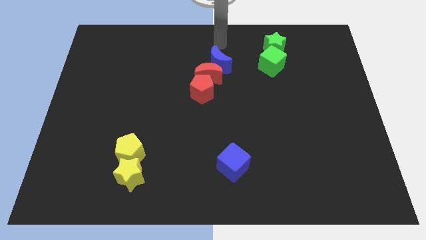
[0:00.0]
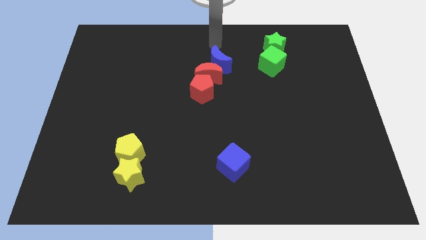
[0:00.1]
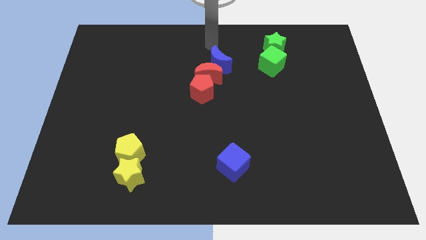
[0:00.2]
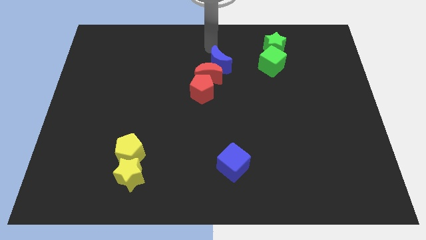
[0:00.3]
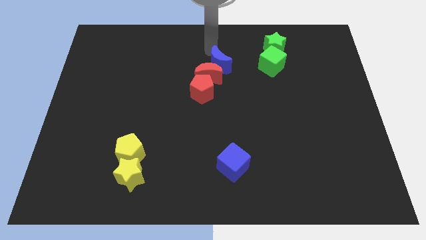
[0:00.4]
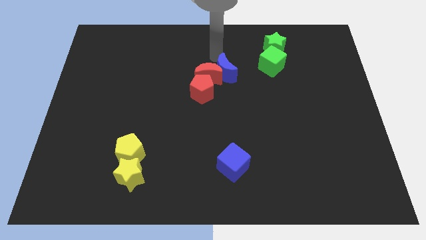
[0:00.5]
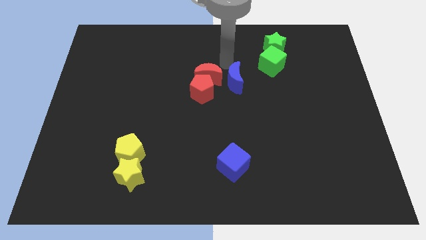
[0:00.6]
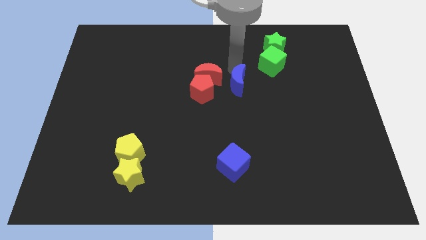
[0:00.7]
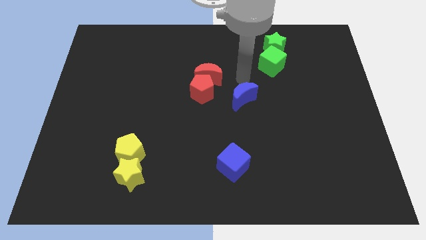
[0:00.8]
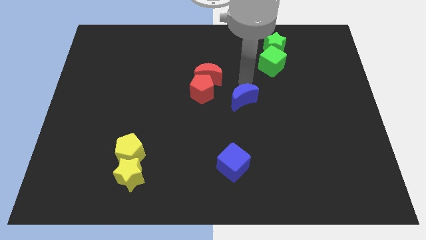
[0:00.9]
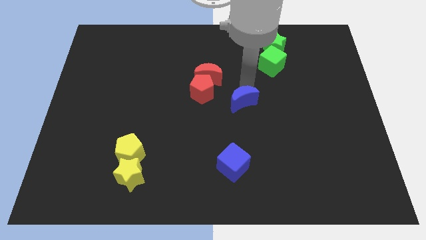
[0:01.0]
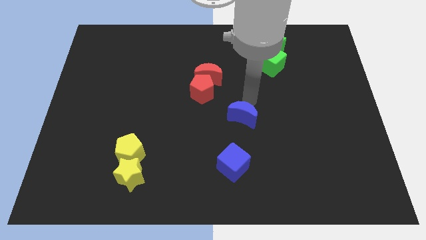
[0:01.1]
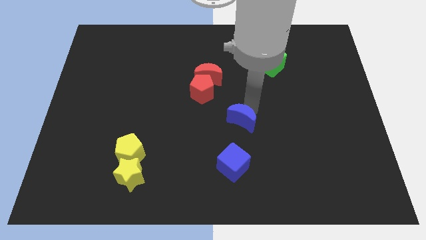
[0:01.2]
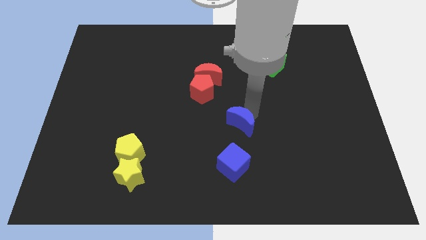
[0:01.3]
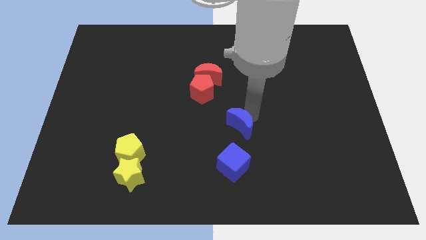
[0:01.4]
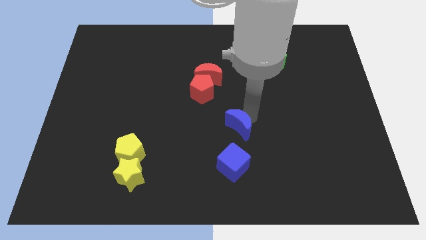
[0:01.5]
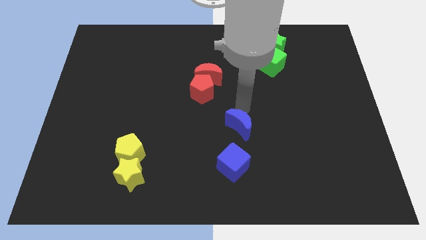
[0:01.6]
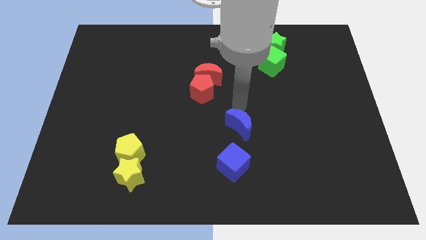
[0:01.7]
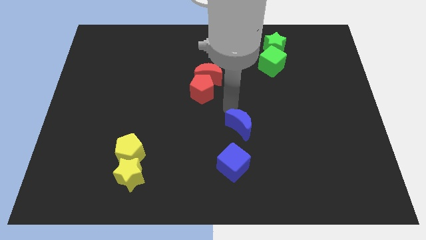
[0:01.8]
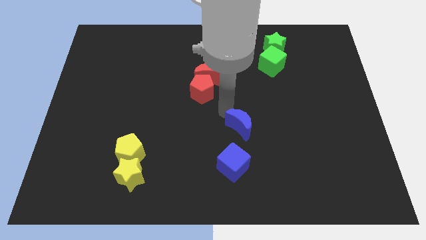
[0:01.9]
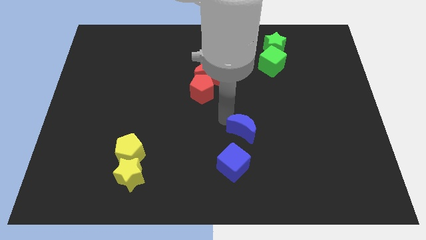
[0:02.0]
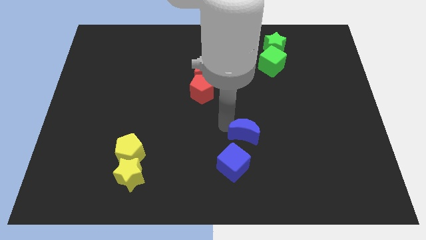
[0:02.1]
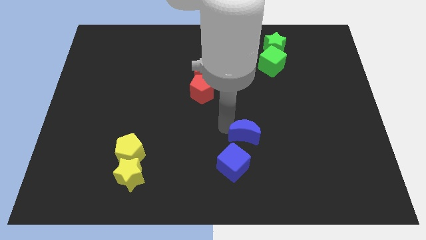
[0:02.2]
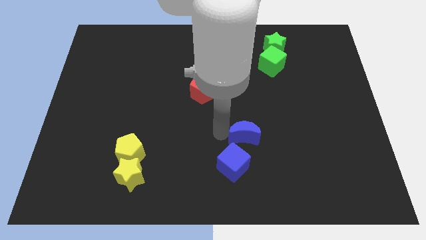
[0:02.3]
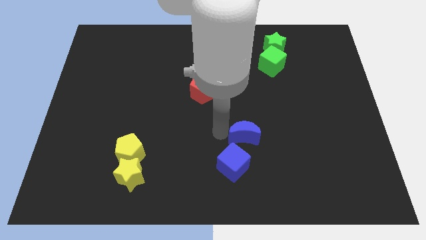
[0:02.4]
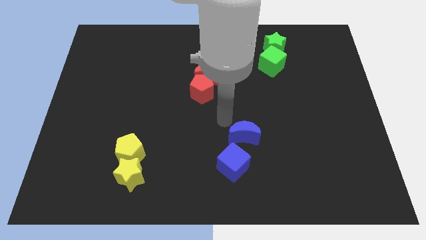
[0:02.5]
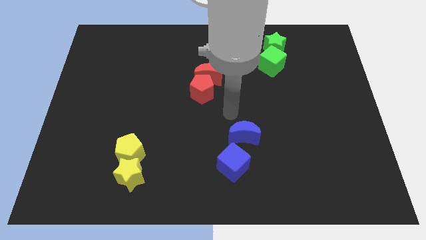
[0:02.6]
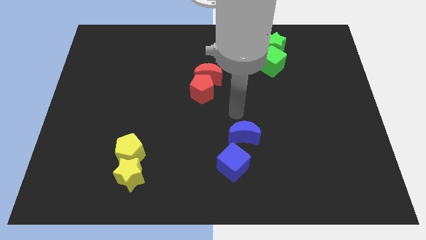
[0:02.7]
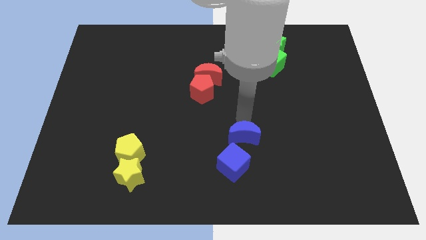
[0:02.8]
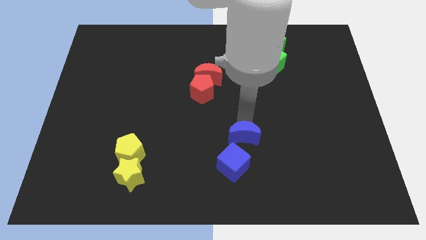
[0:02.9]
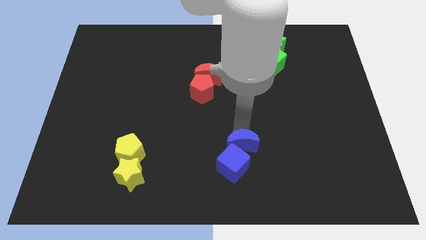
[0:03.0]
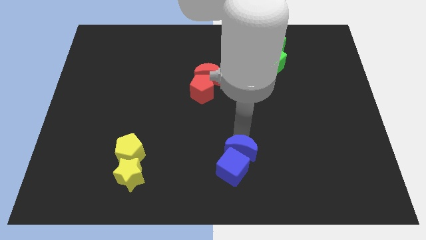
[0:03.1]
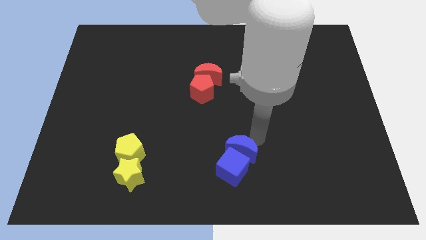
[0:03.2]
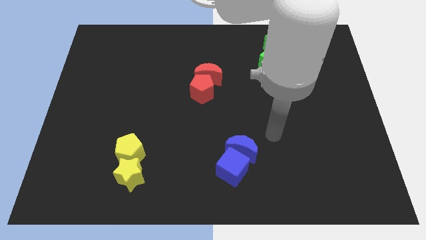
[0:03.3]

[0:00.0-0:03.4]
move the blue moon to the top of the blue cube

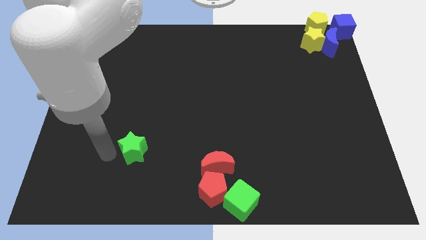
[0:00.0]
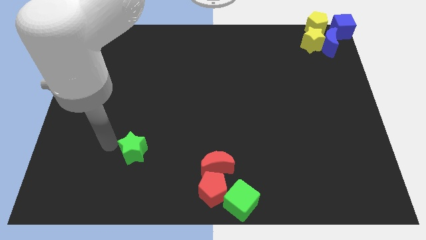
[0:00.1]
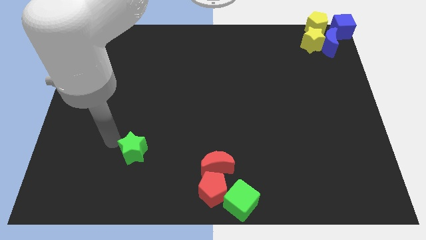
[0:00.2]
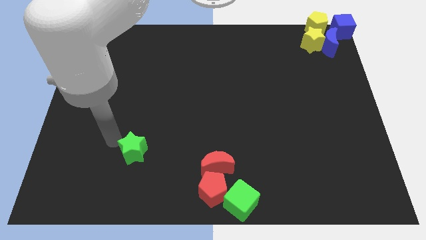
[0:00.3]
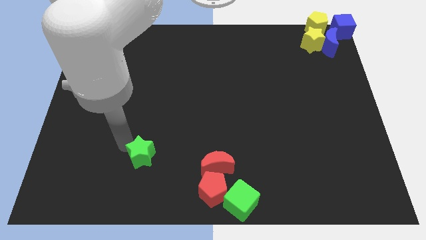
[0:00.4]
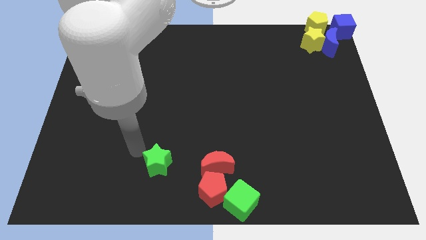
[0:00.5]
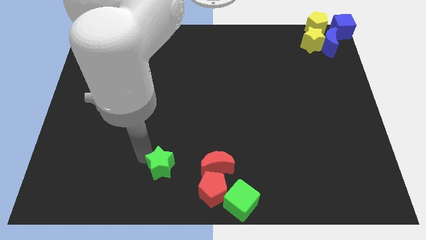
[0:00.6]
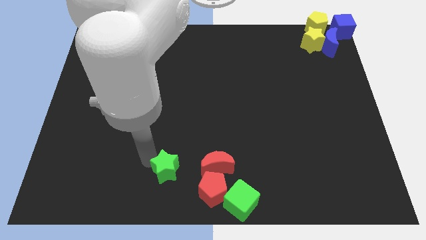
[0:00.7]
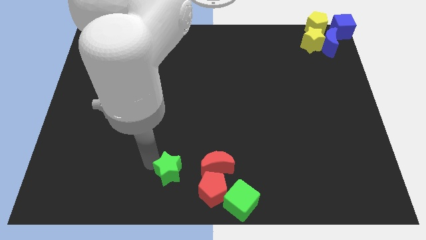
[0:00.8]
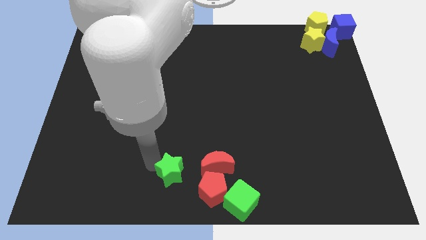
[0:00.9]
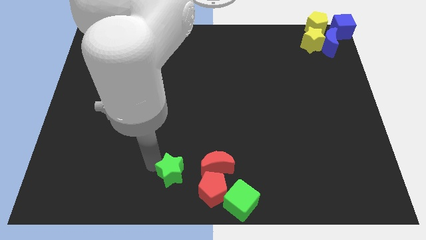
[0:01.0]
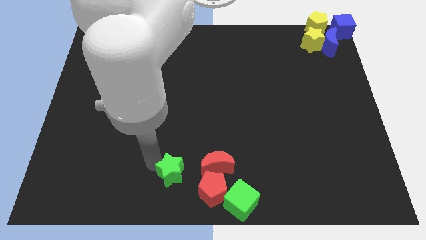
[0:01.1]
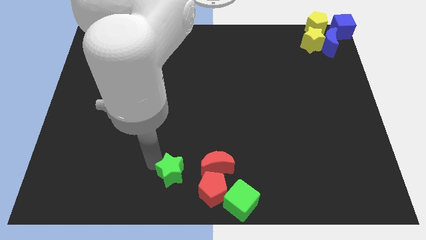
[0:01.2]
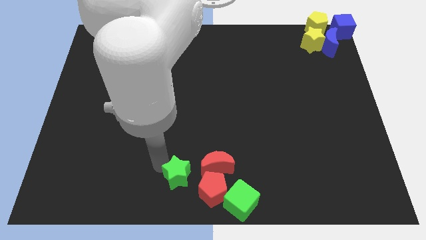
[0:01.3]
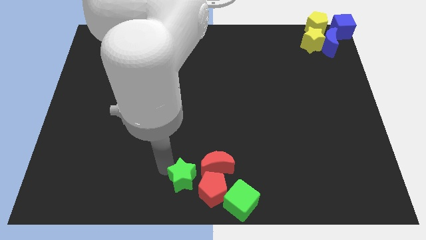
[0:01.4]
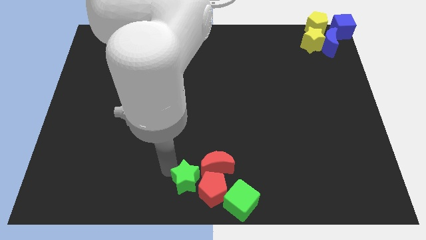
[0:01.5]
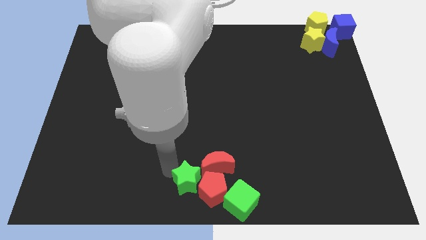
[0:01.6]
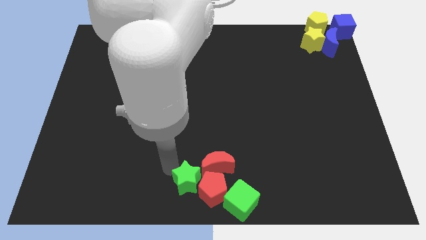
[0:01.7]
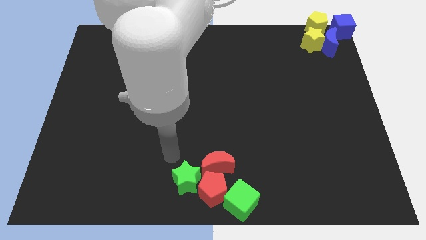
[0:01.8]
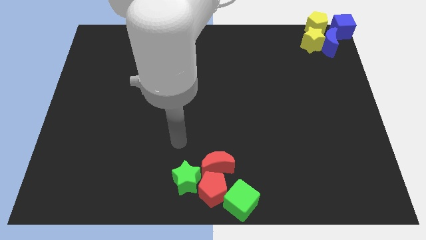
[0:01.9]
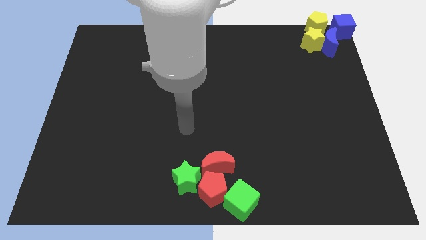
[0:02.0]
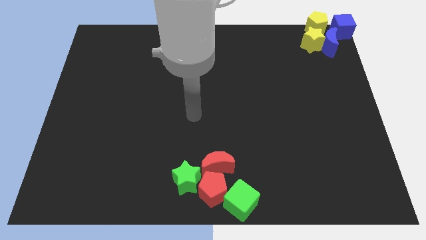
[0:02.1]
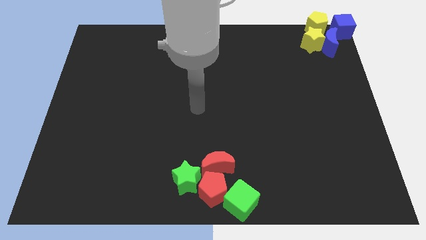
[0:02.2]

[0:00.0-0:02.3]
move the green star into the red pentagon

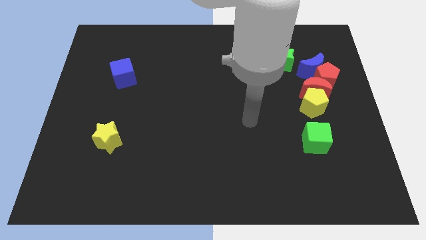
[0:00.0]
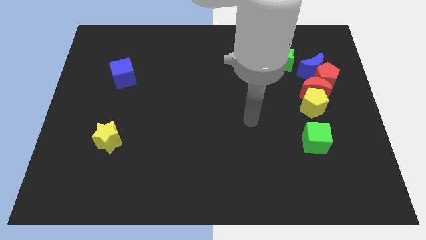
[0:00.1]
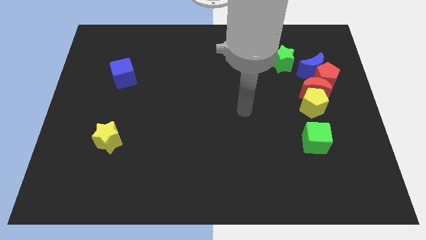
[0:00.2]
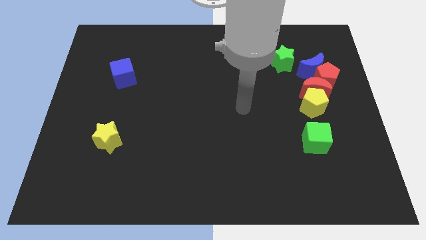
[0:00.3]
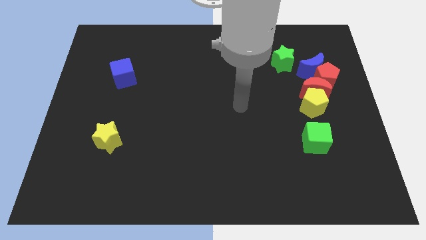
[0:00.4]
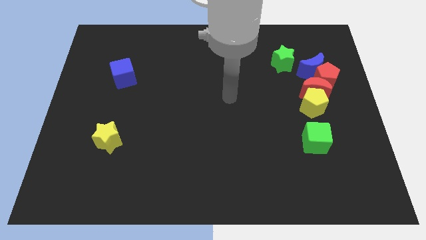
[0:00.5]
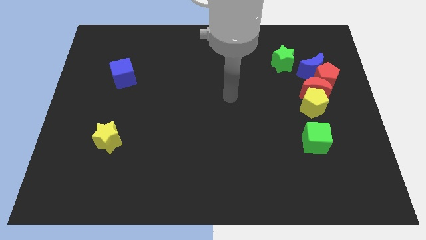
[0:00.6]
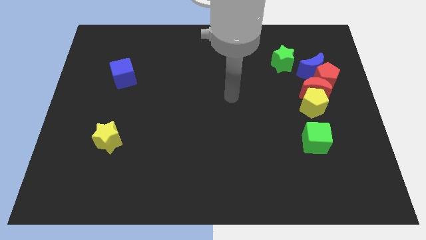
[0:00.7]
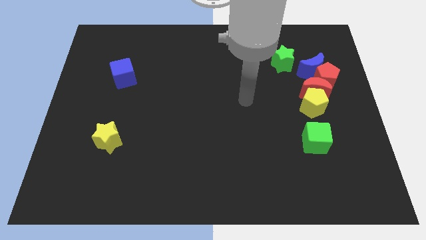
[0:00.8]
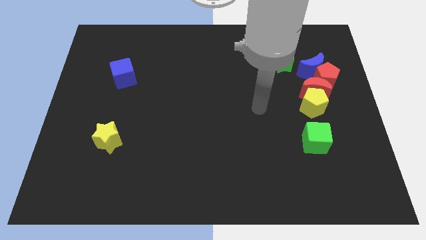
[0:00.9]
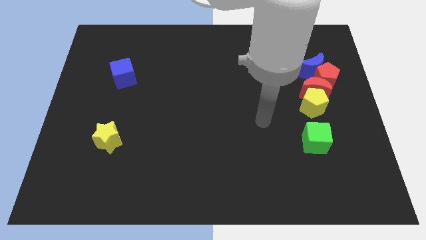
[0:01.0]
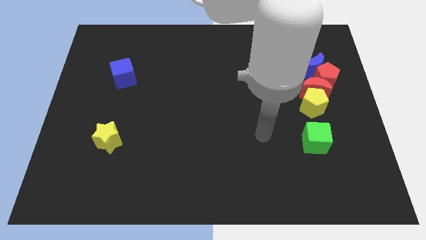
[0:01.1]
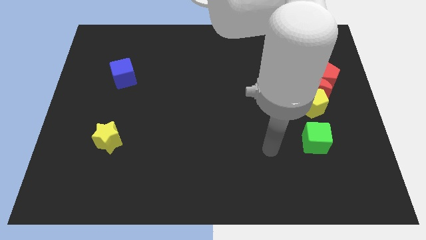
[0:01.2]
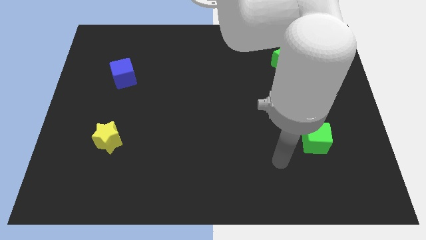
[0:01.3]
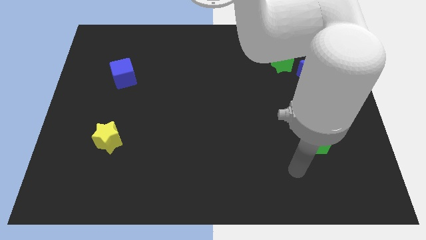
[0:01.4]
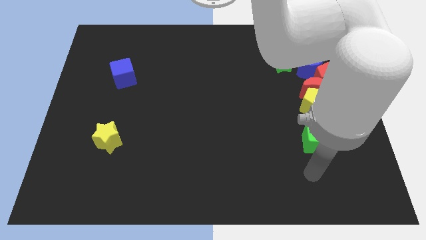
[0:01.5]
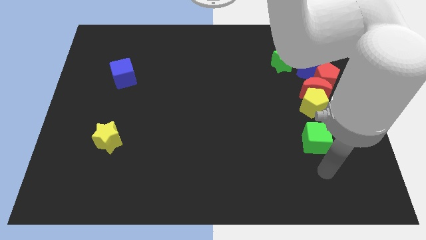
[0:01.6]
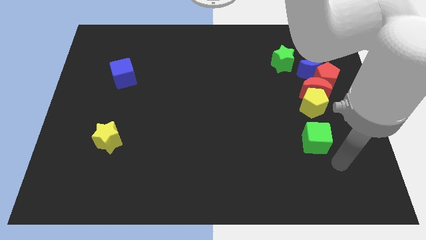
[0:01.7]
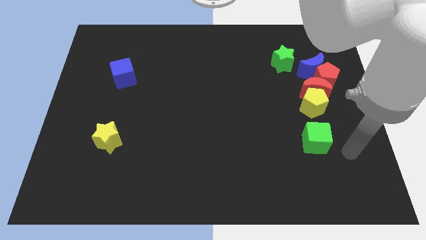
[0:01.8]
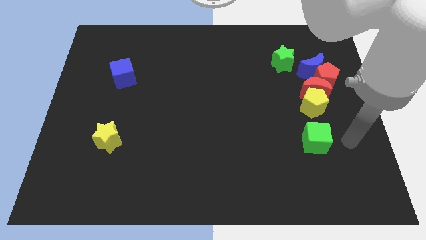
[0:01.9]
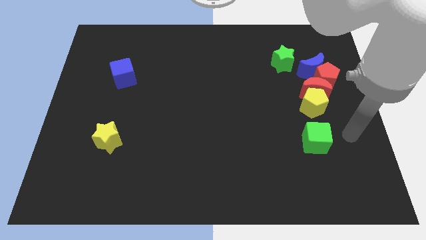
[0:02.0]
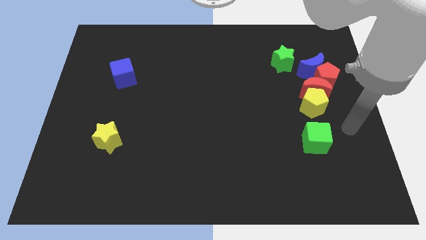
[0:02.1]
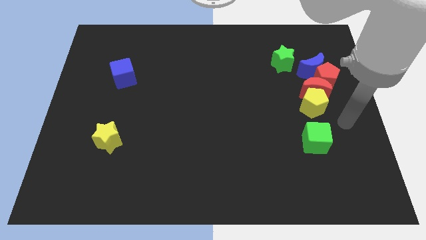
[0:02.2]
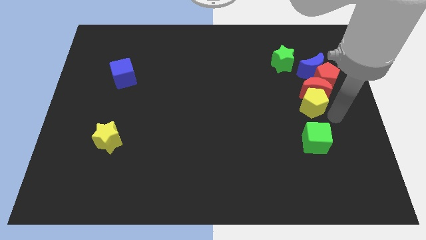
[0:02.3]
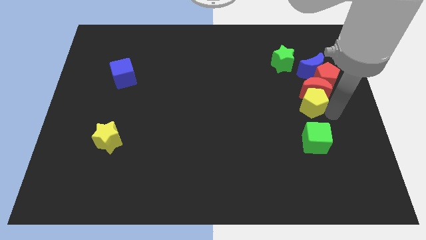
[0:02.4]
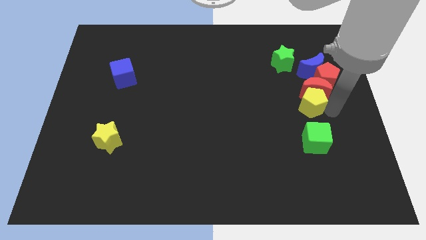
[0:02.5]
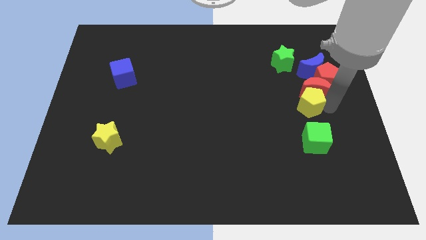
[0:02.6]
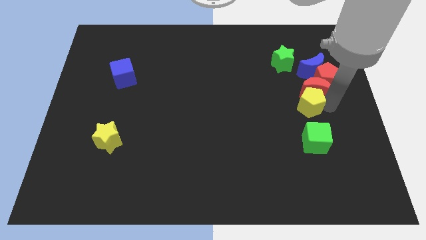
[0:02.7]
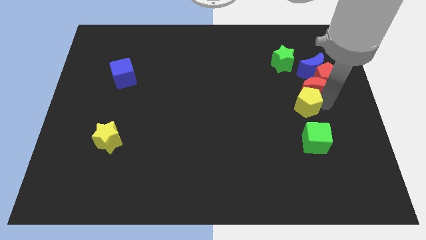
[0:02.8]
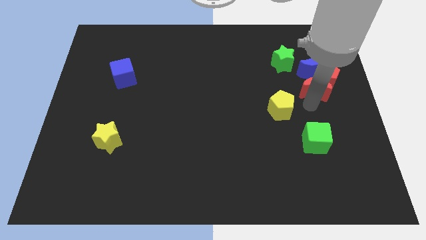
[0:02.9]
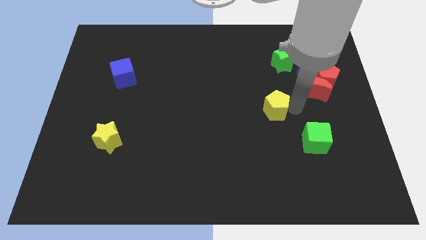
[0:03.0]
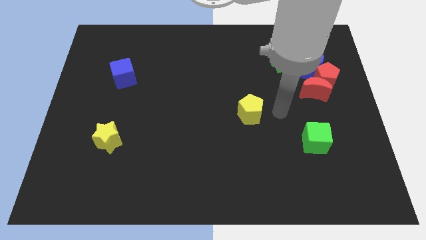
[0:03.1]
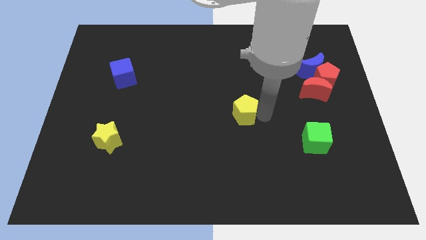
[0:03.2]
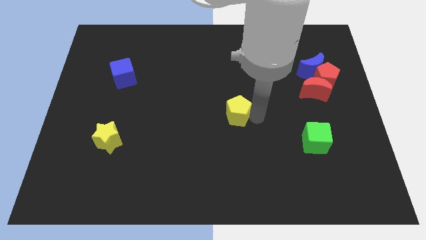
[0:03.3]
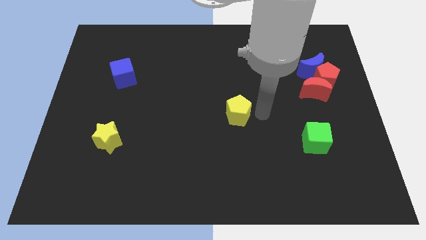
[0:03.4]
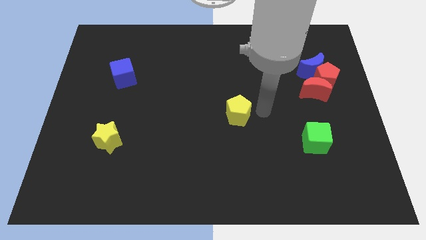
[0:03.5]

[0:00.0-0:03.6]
place yellow pentagon to the center of the board
